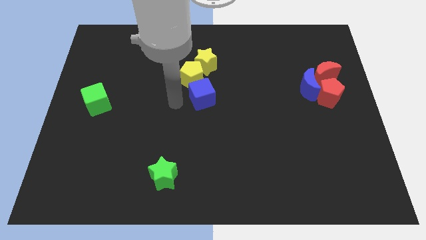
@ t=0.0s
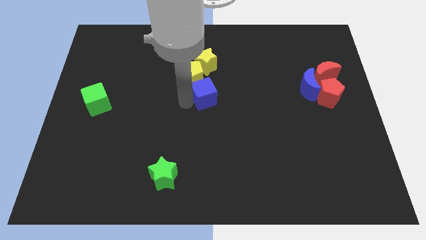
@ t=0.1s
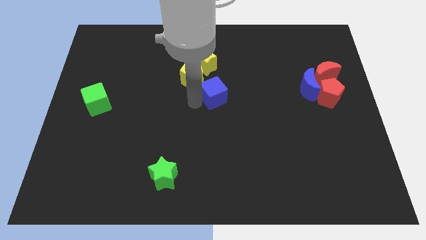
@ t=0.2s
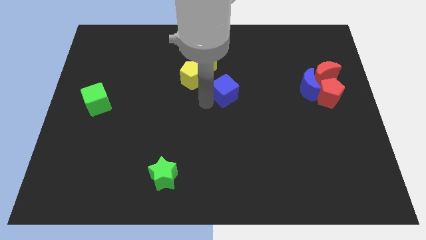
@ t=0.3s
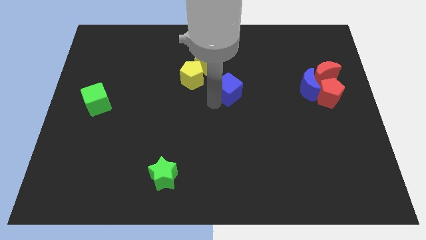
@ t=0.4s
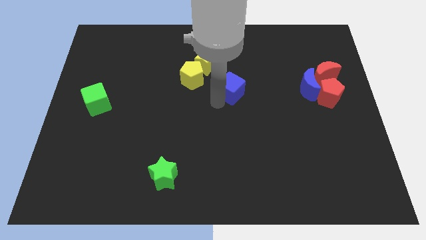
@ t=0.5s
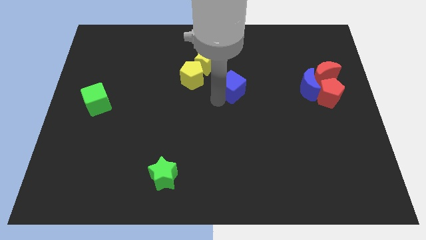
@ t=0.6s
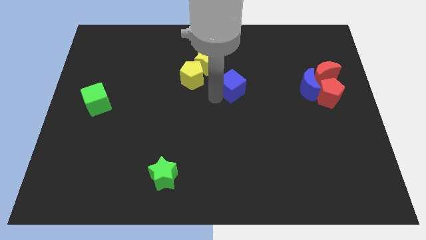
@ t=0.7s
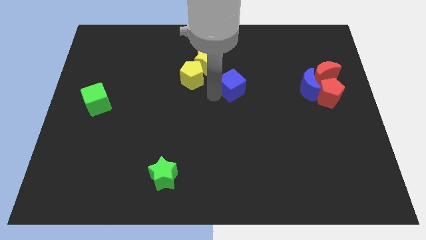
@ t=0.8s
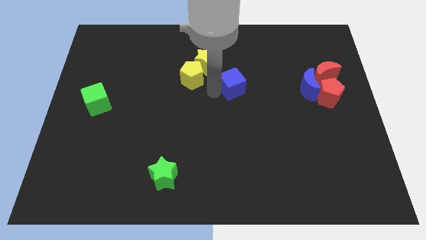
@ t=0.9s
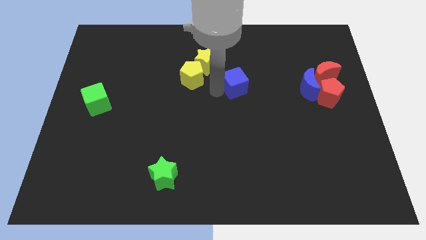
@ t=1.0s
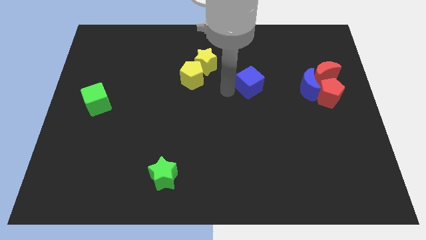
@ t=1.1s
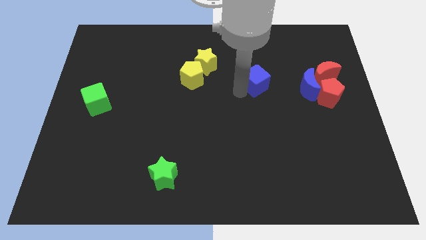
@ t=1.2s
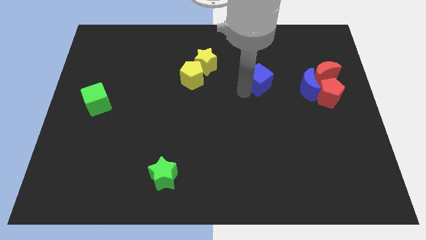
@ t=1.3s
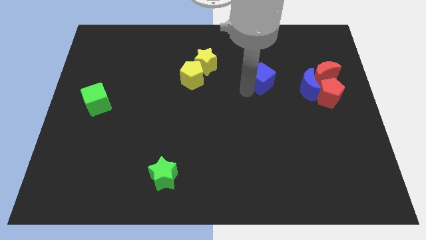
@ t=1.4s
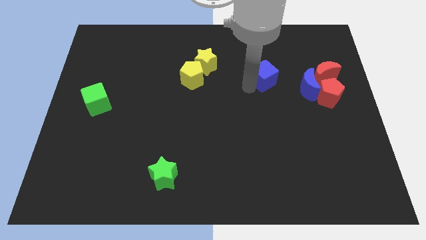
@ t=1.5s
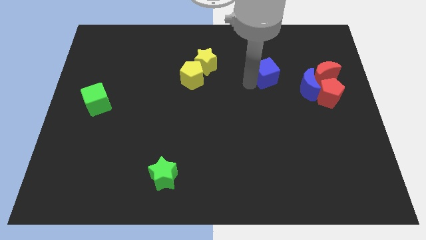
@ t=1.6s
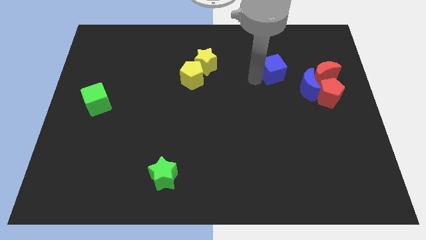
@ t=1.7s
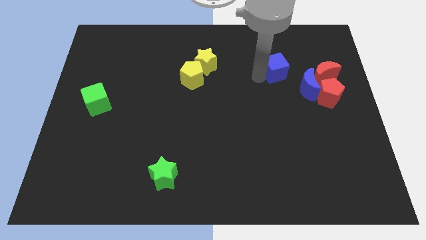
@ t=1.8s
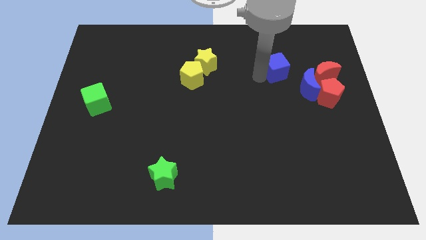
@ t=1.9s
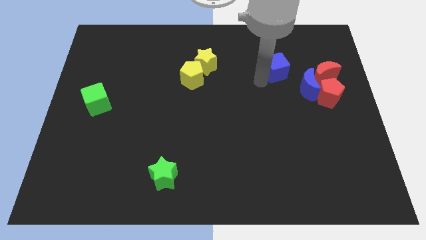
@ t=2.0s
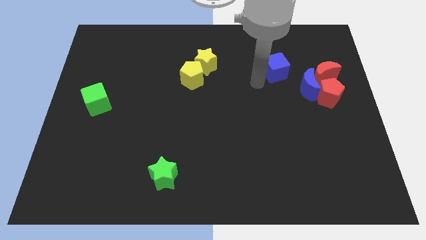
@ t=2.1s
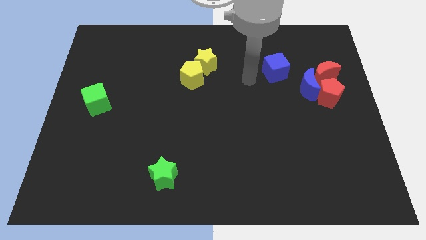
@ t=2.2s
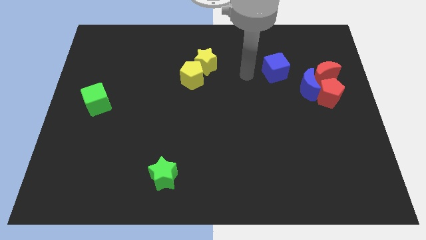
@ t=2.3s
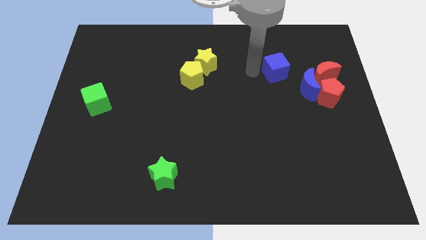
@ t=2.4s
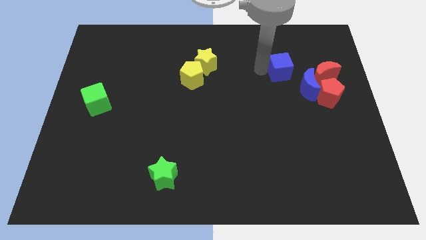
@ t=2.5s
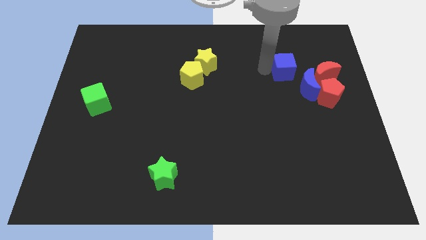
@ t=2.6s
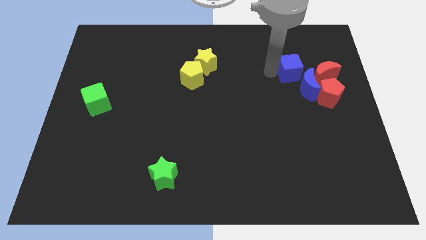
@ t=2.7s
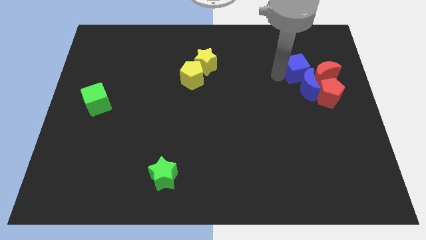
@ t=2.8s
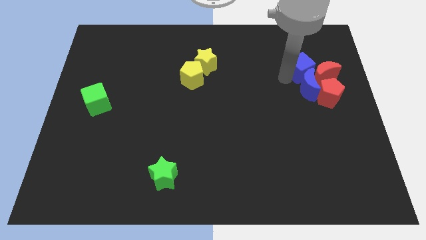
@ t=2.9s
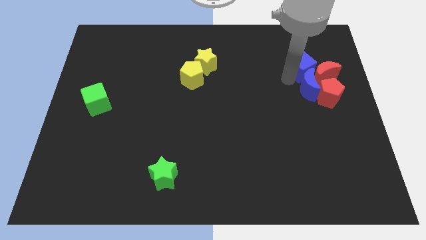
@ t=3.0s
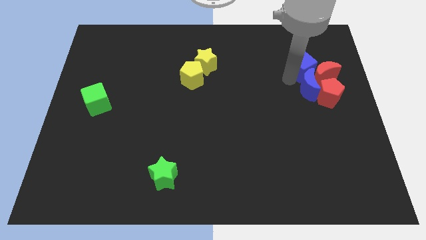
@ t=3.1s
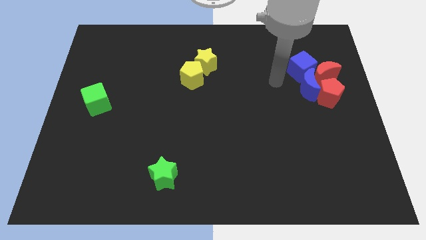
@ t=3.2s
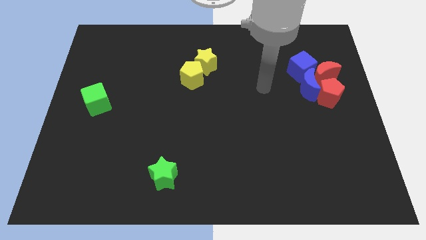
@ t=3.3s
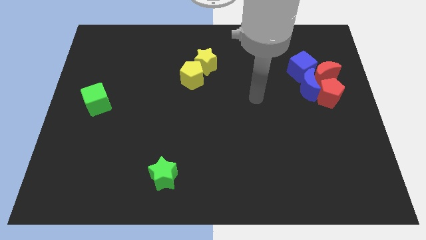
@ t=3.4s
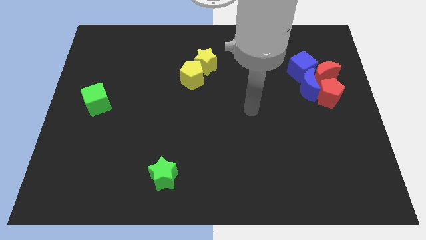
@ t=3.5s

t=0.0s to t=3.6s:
move the blue cube to the top of the blue crescent

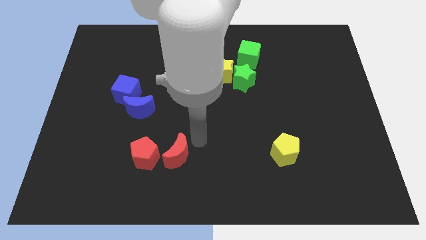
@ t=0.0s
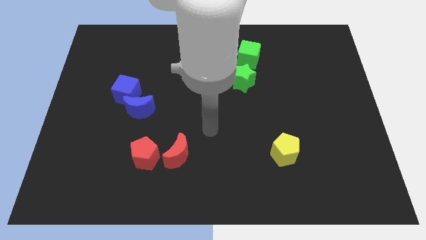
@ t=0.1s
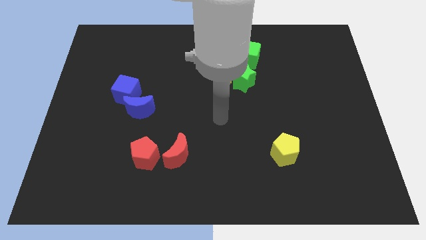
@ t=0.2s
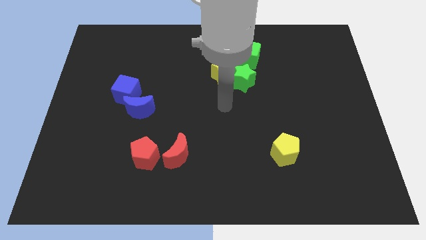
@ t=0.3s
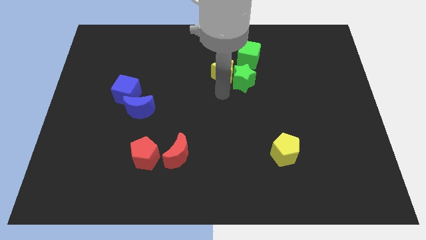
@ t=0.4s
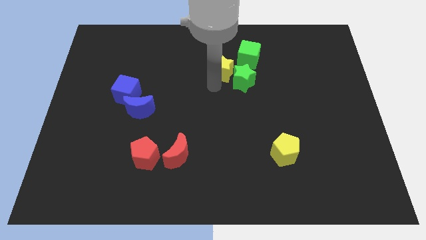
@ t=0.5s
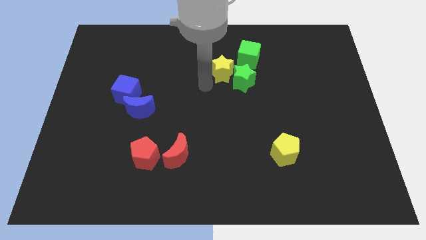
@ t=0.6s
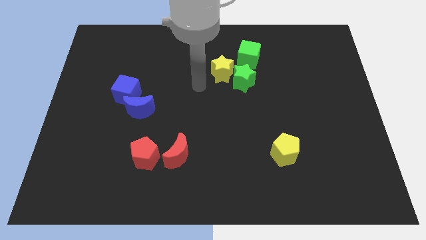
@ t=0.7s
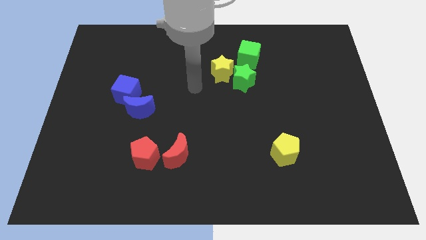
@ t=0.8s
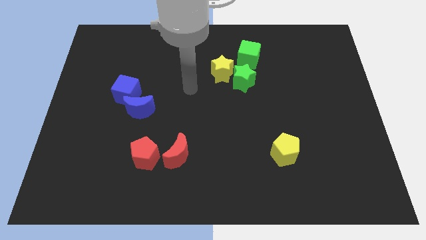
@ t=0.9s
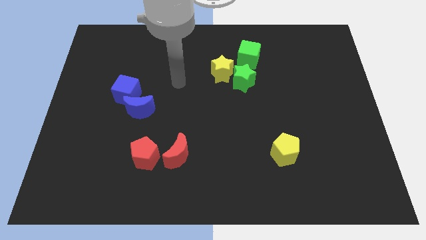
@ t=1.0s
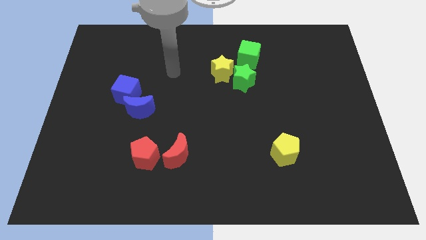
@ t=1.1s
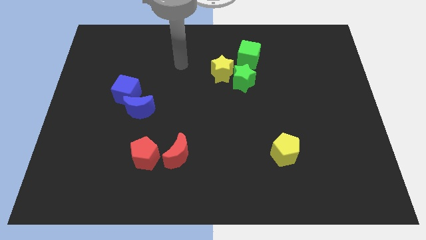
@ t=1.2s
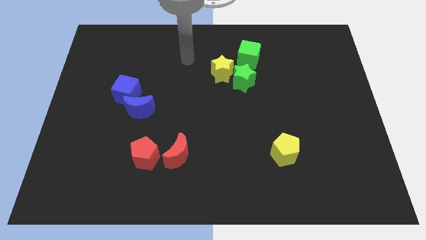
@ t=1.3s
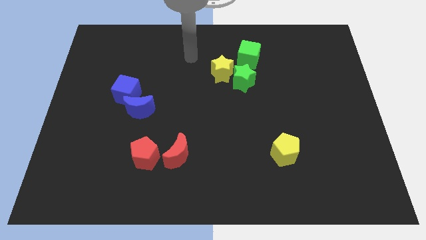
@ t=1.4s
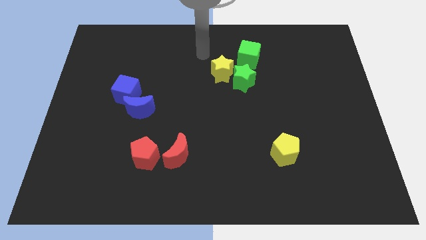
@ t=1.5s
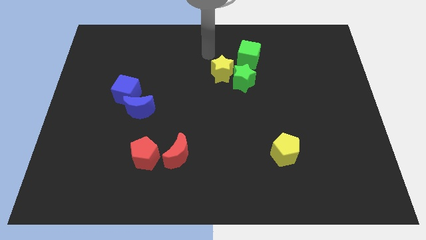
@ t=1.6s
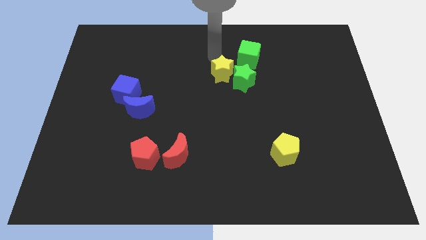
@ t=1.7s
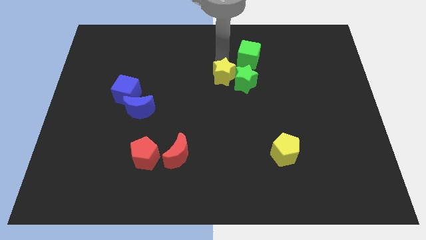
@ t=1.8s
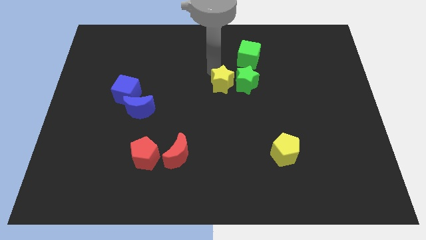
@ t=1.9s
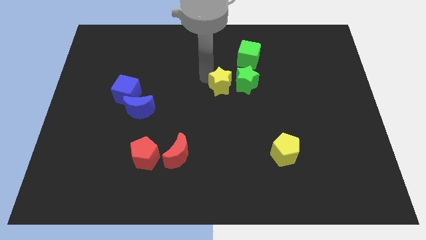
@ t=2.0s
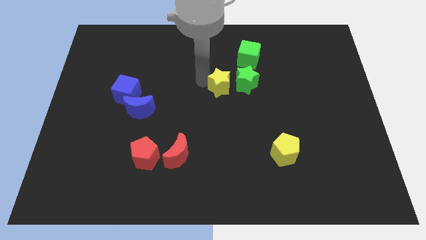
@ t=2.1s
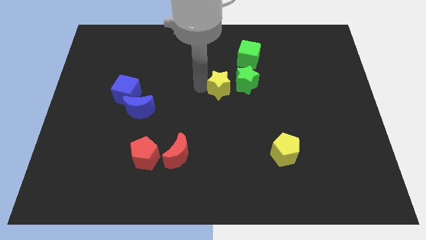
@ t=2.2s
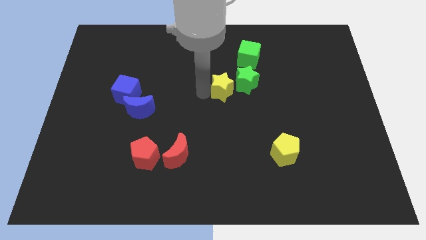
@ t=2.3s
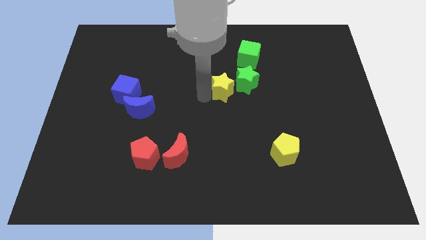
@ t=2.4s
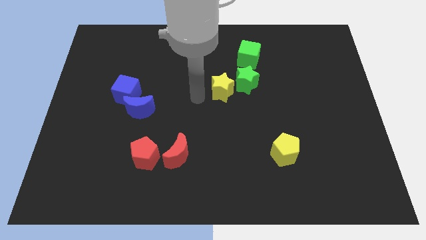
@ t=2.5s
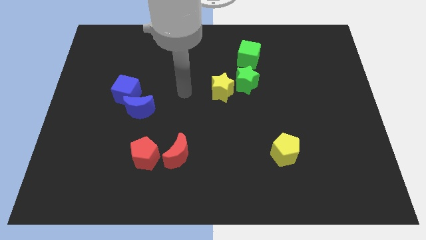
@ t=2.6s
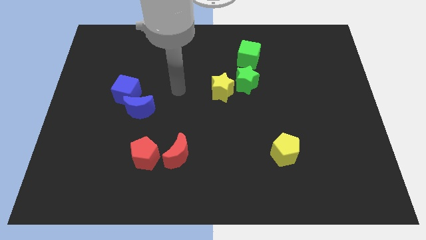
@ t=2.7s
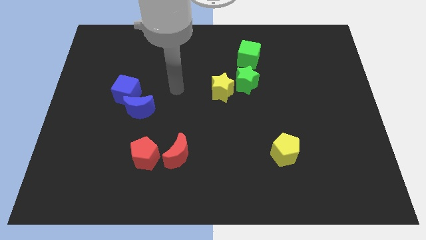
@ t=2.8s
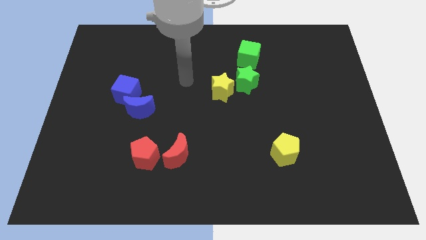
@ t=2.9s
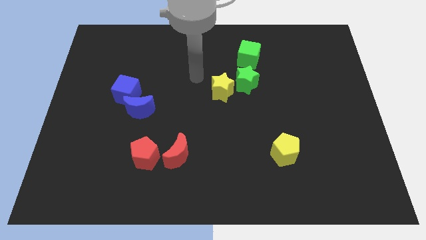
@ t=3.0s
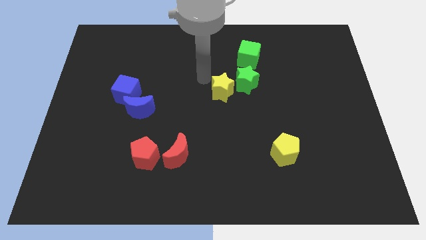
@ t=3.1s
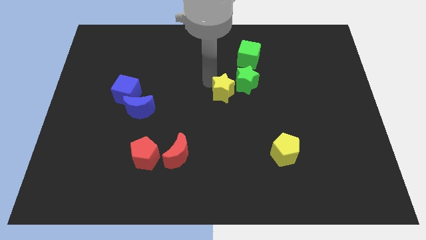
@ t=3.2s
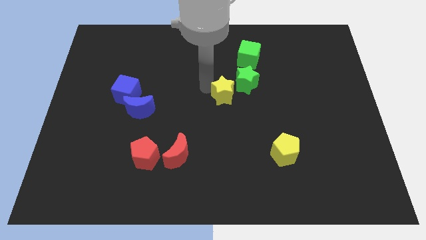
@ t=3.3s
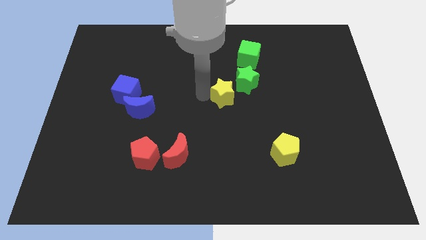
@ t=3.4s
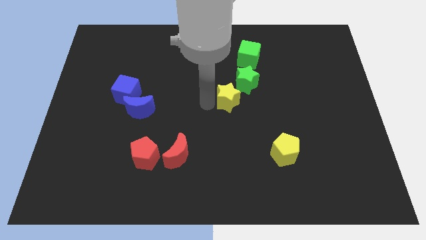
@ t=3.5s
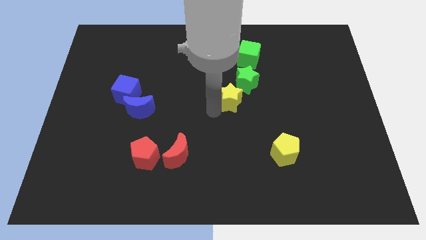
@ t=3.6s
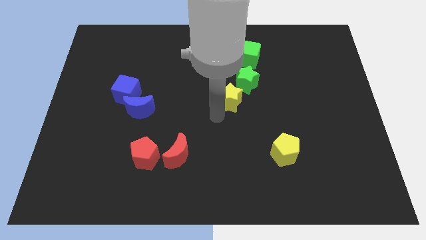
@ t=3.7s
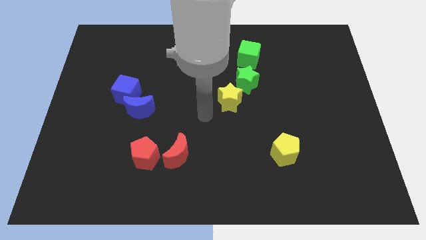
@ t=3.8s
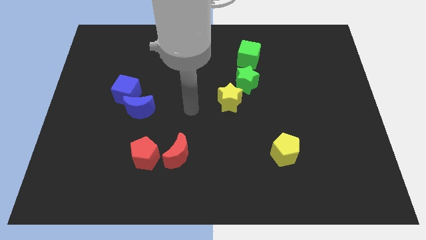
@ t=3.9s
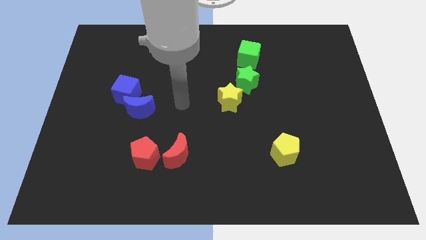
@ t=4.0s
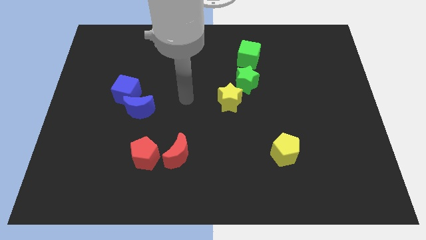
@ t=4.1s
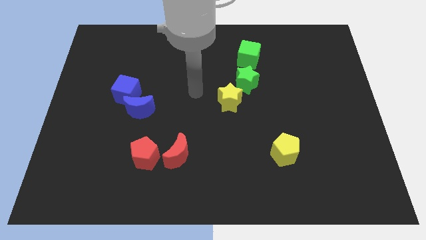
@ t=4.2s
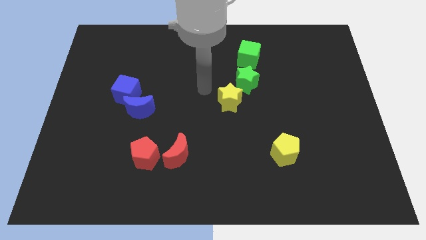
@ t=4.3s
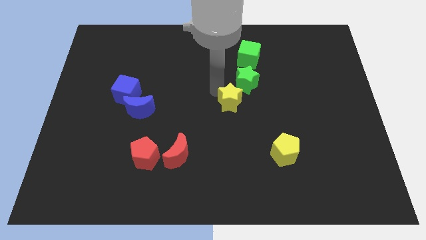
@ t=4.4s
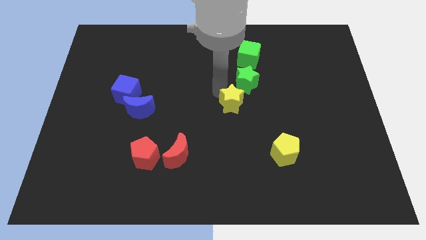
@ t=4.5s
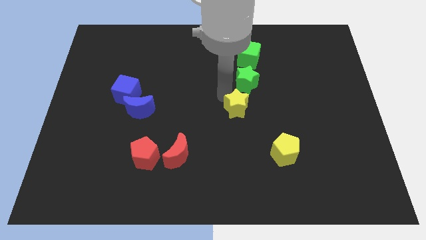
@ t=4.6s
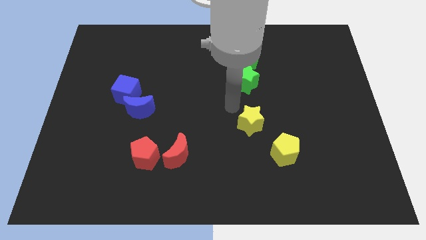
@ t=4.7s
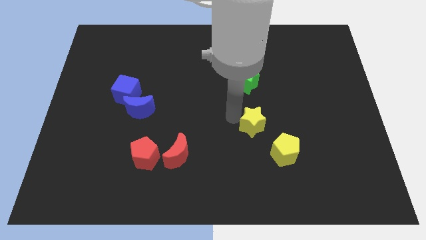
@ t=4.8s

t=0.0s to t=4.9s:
separate yellow star from green star

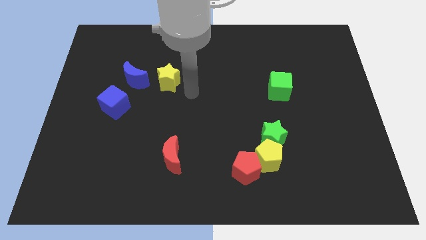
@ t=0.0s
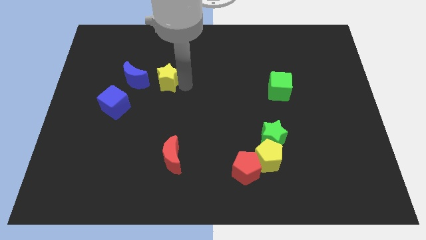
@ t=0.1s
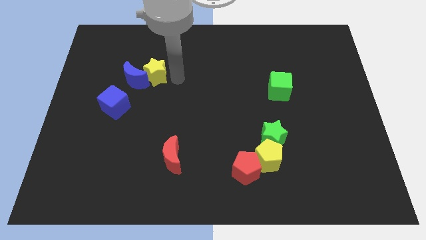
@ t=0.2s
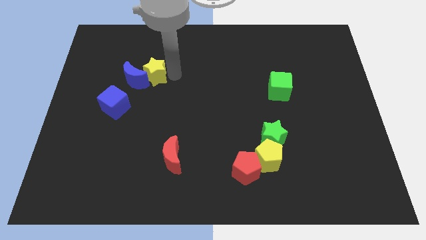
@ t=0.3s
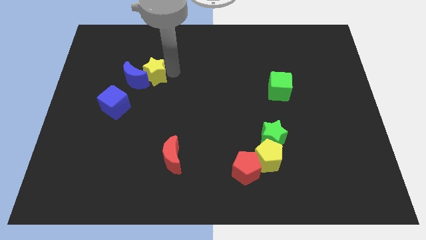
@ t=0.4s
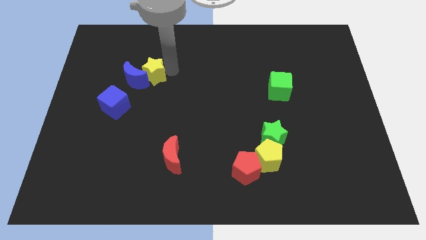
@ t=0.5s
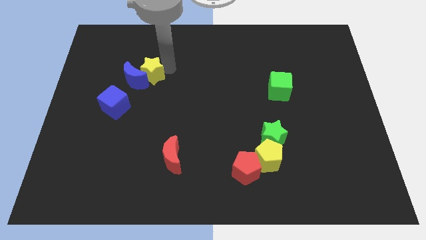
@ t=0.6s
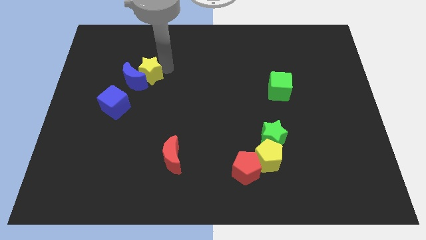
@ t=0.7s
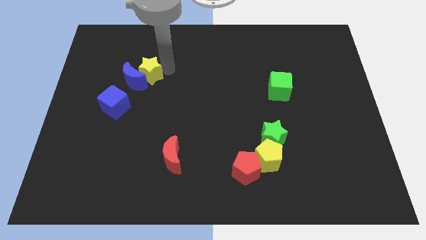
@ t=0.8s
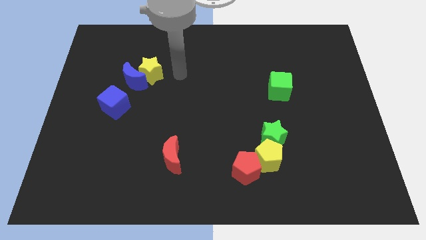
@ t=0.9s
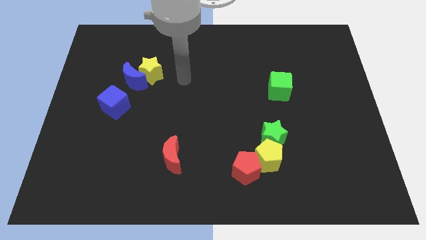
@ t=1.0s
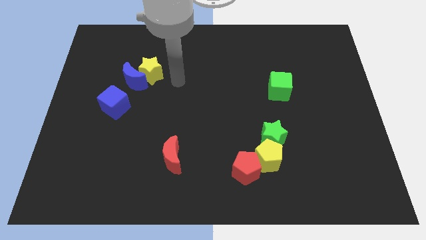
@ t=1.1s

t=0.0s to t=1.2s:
push the yellow star into the blue crescent
